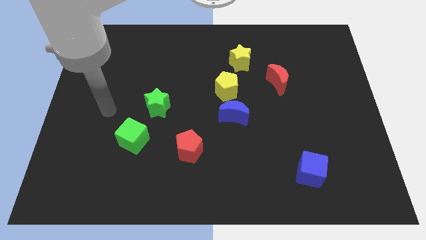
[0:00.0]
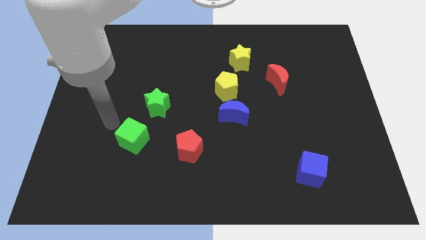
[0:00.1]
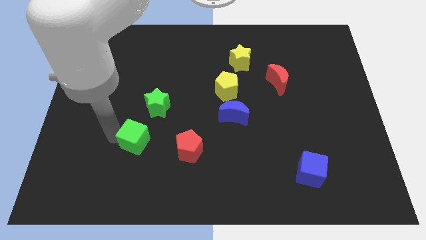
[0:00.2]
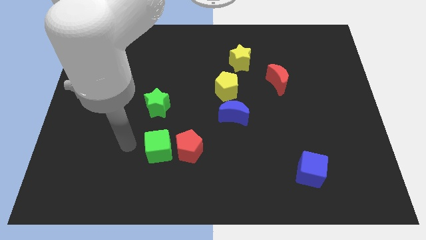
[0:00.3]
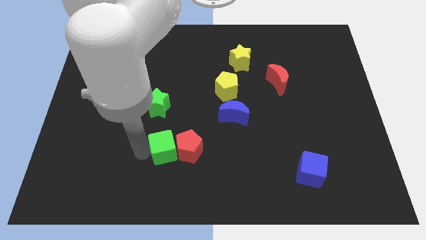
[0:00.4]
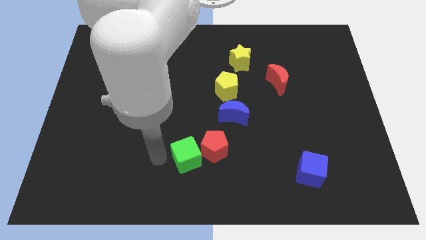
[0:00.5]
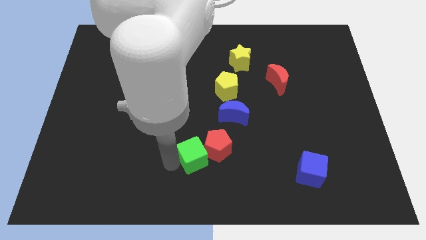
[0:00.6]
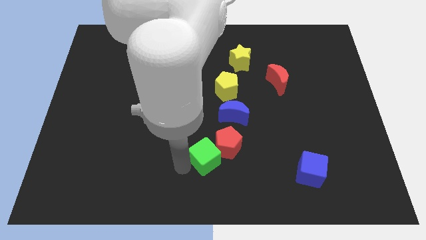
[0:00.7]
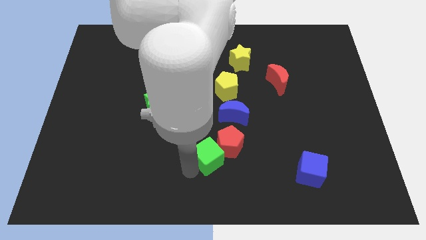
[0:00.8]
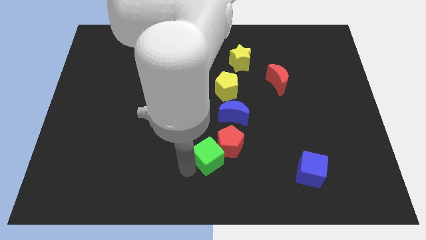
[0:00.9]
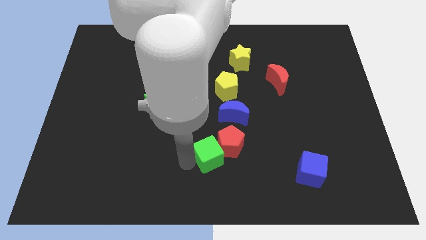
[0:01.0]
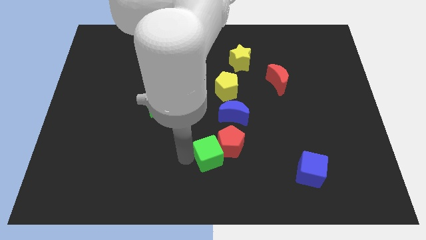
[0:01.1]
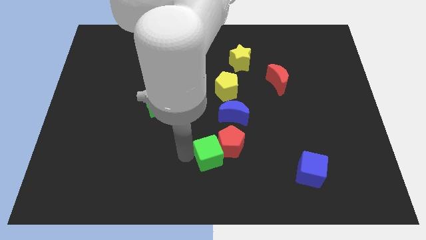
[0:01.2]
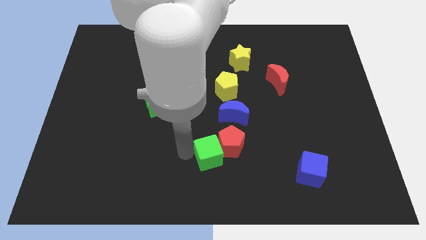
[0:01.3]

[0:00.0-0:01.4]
push the green cube into the red pentagon

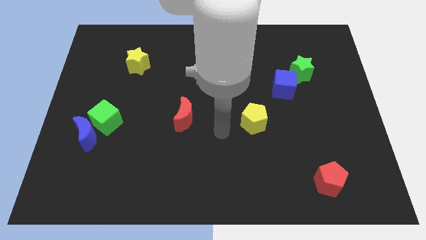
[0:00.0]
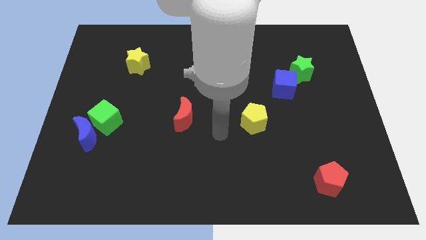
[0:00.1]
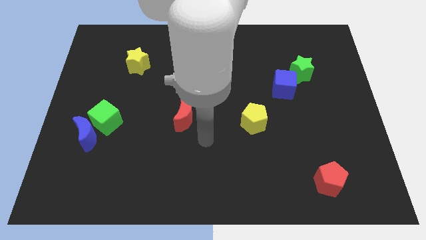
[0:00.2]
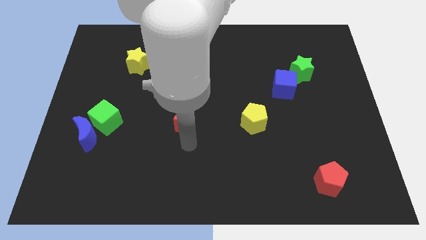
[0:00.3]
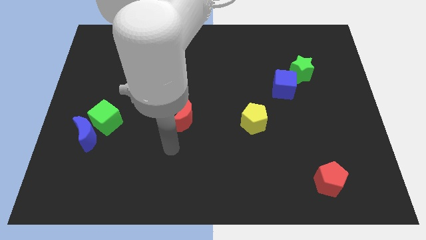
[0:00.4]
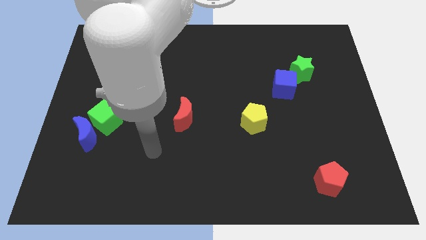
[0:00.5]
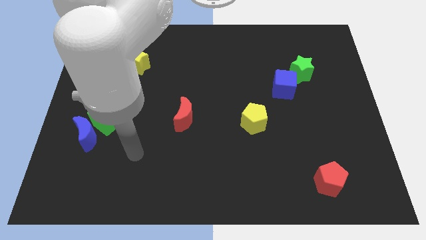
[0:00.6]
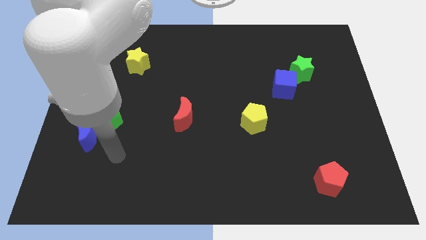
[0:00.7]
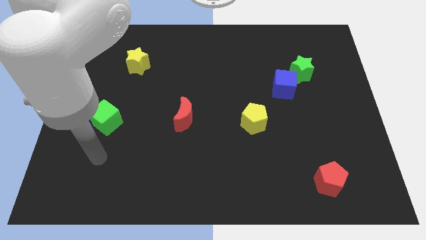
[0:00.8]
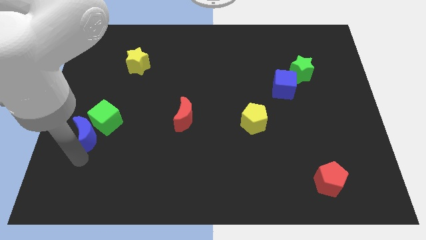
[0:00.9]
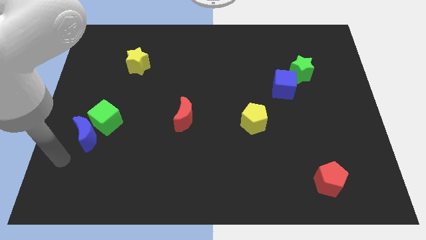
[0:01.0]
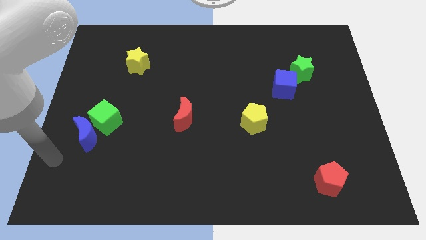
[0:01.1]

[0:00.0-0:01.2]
move your arm towards the left side of the board

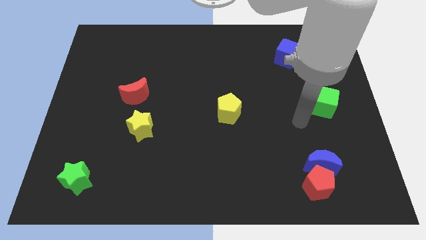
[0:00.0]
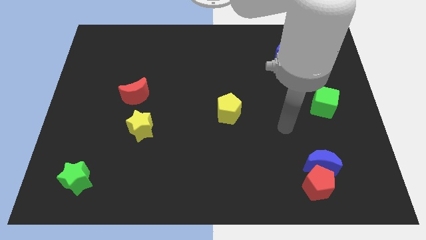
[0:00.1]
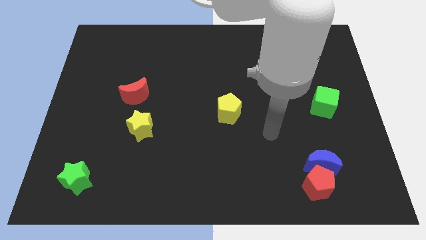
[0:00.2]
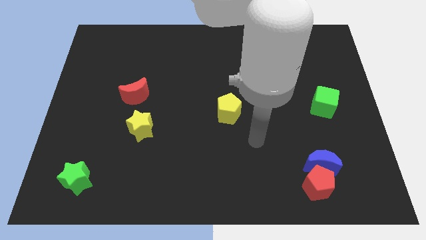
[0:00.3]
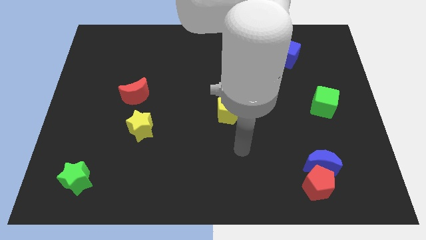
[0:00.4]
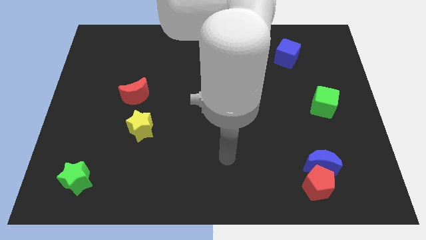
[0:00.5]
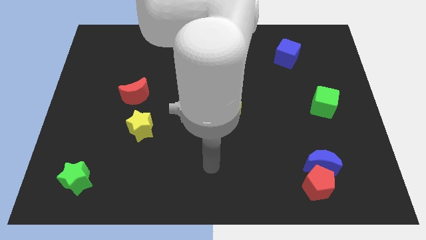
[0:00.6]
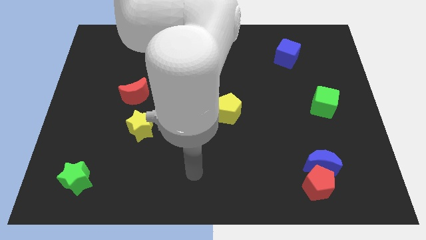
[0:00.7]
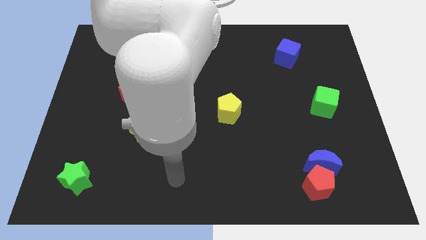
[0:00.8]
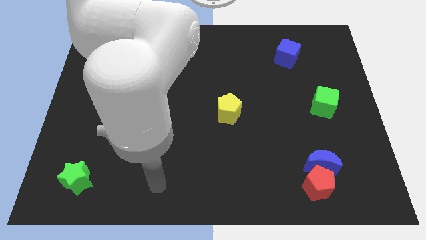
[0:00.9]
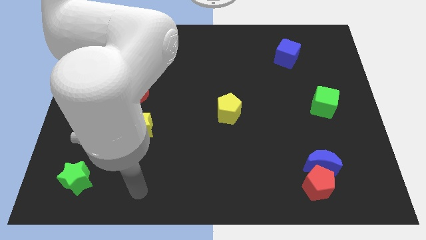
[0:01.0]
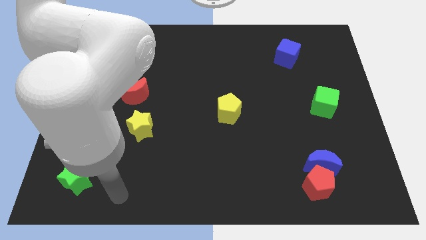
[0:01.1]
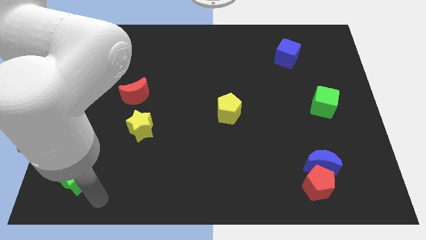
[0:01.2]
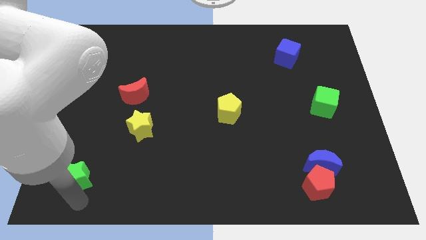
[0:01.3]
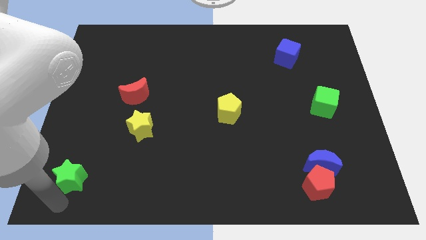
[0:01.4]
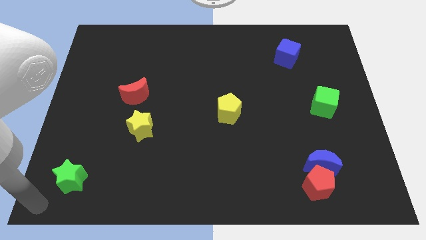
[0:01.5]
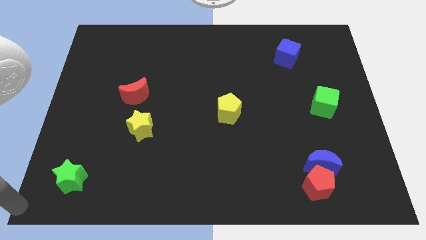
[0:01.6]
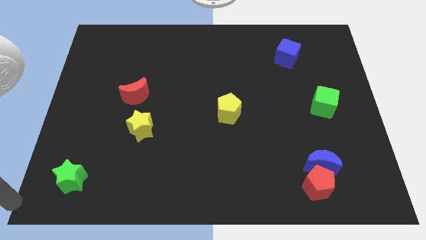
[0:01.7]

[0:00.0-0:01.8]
move the arm at the bottom left corner of the board

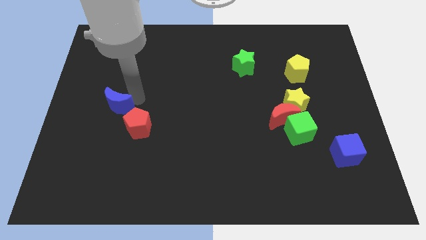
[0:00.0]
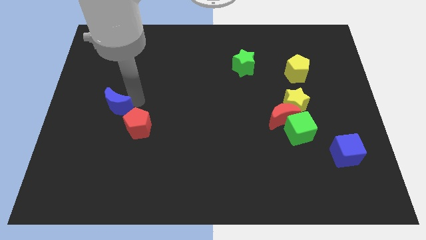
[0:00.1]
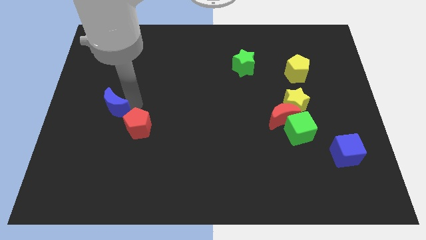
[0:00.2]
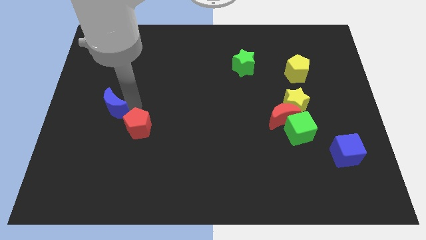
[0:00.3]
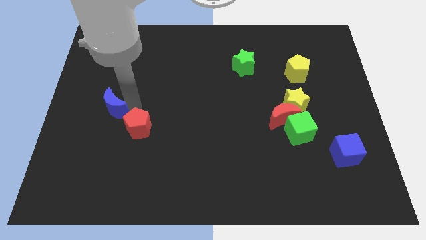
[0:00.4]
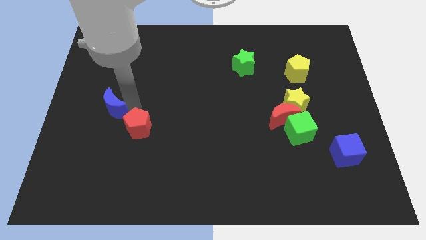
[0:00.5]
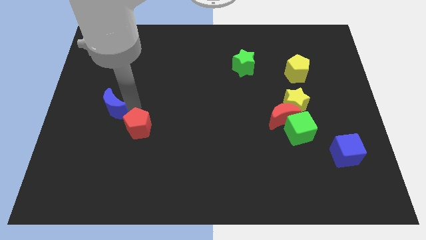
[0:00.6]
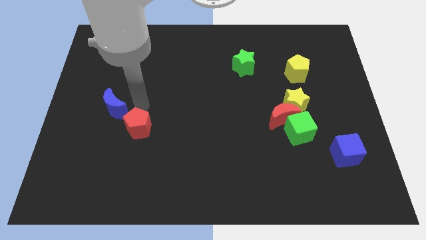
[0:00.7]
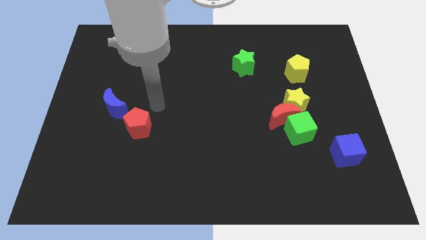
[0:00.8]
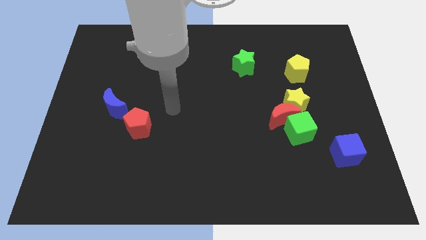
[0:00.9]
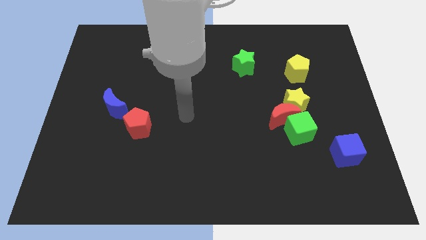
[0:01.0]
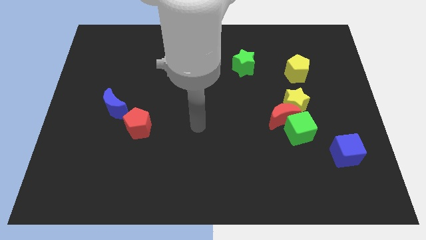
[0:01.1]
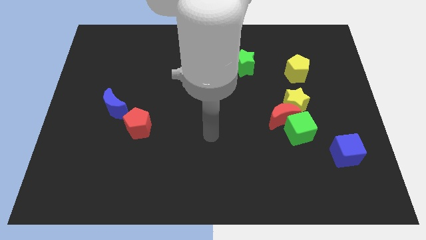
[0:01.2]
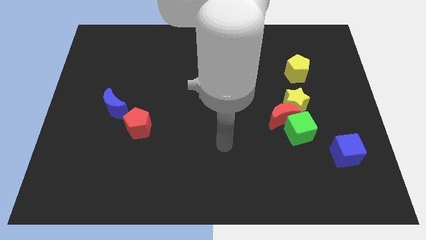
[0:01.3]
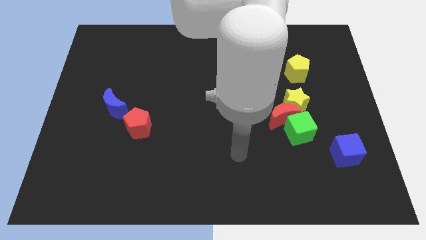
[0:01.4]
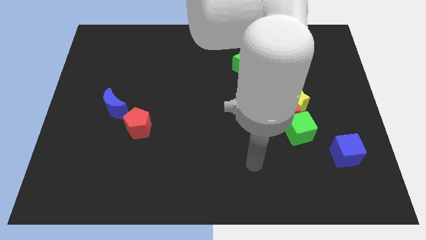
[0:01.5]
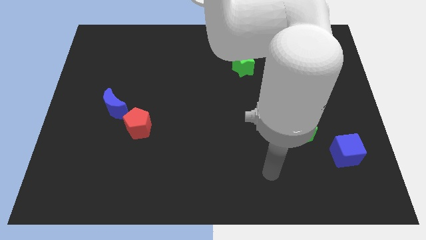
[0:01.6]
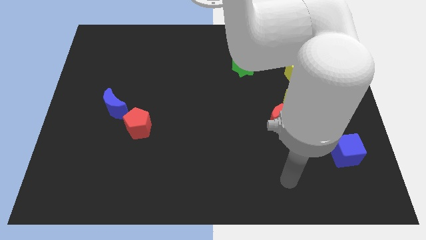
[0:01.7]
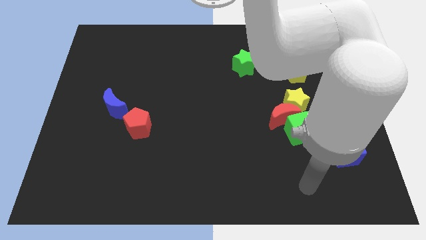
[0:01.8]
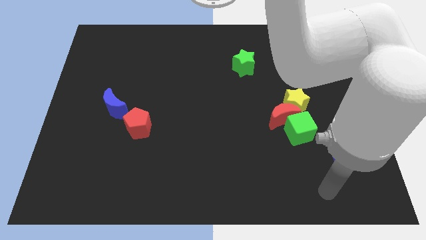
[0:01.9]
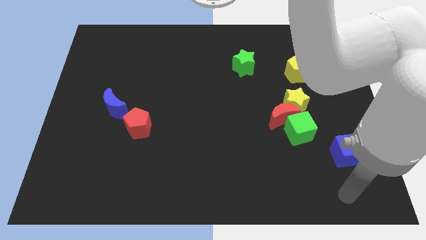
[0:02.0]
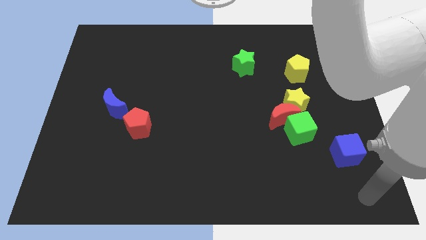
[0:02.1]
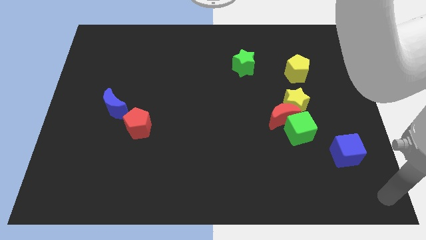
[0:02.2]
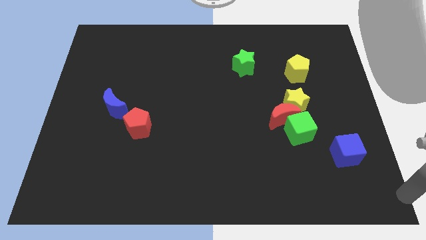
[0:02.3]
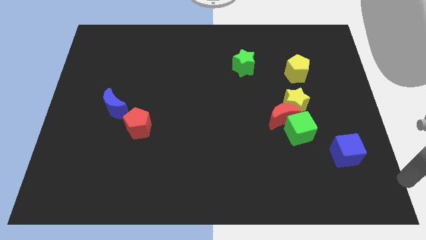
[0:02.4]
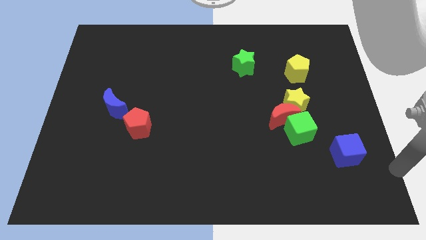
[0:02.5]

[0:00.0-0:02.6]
move your arm to the right bottom

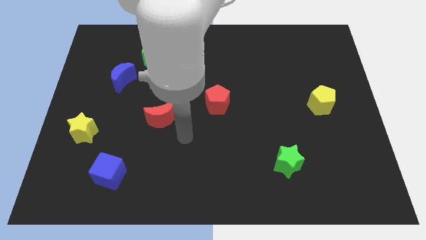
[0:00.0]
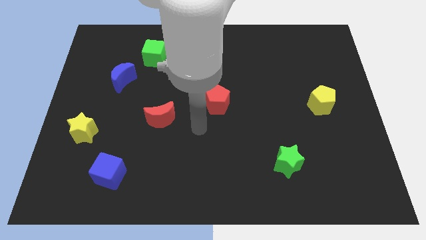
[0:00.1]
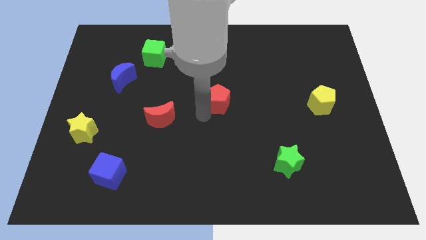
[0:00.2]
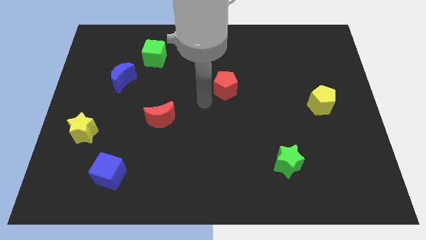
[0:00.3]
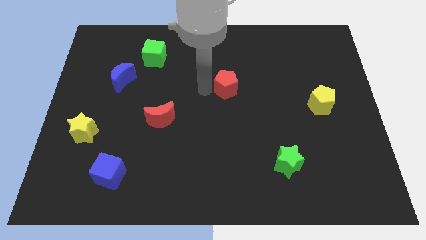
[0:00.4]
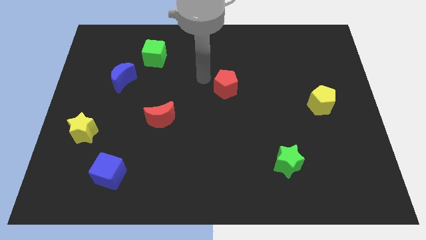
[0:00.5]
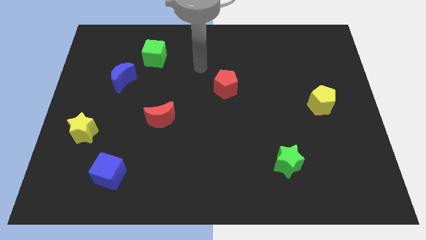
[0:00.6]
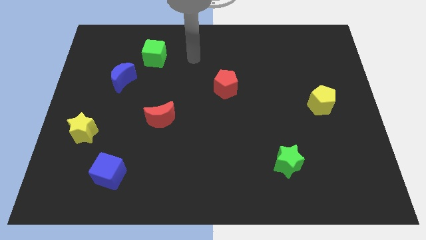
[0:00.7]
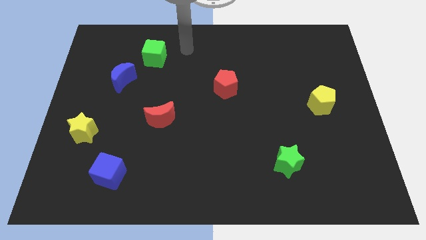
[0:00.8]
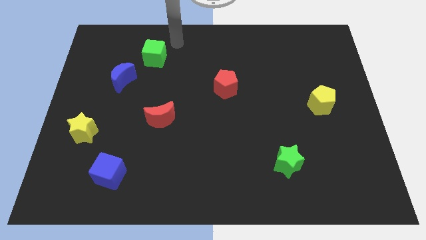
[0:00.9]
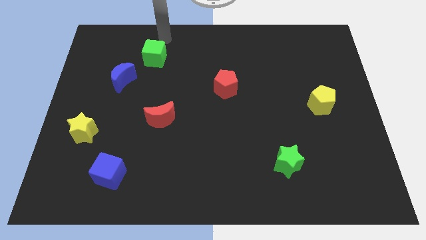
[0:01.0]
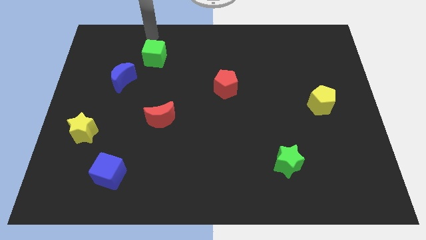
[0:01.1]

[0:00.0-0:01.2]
slide the red pentagon towards the top side of the board

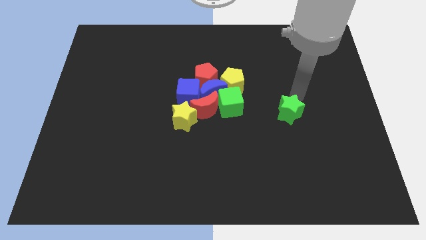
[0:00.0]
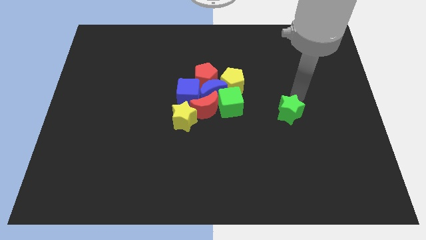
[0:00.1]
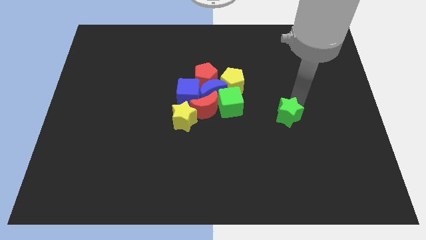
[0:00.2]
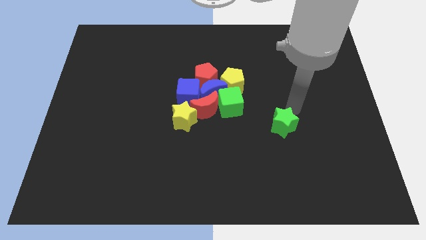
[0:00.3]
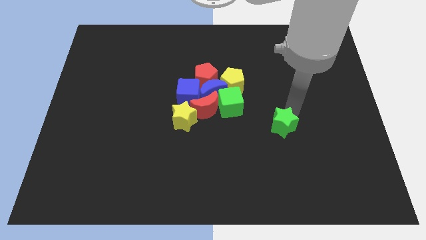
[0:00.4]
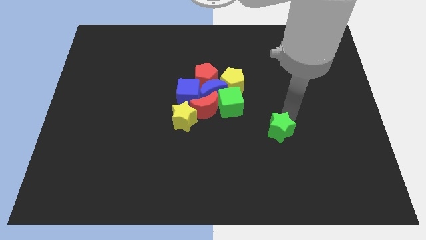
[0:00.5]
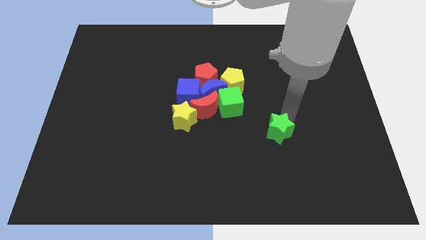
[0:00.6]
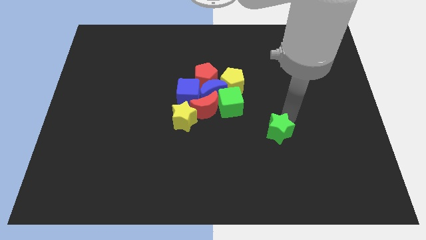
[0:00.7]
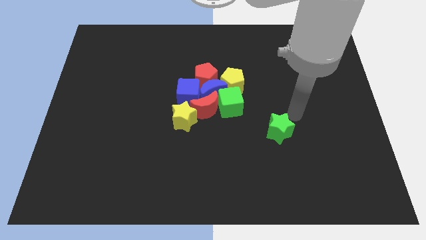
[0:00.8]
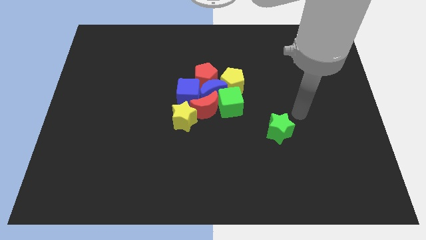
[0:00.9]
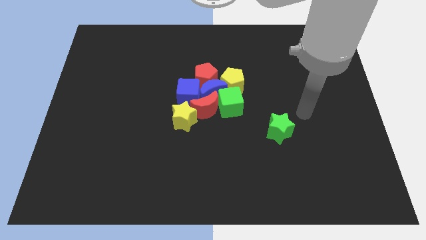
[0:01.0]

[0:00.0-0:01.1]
move the green star diagonal to the green cube
